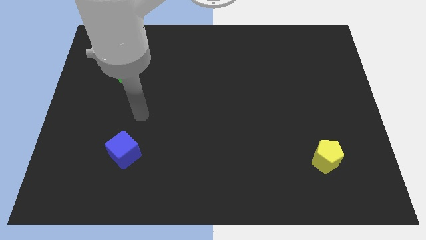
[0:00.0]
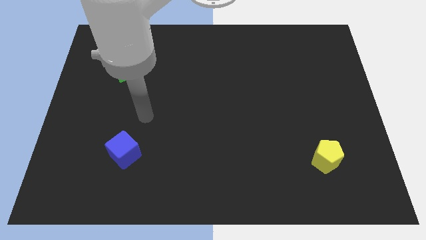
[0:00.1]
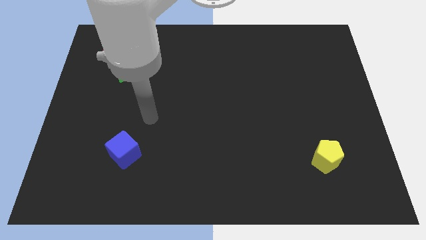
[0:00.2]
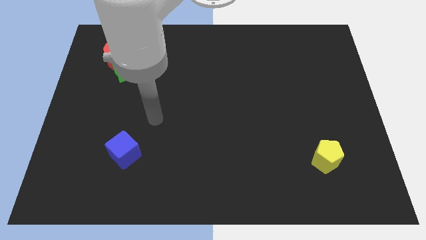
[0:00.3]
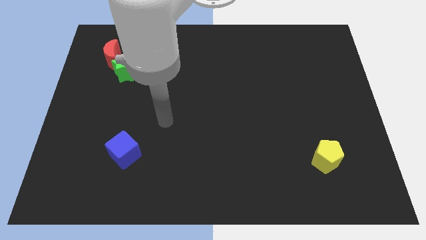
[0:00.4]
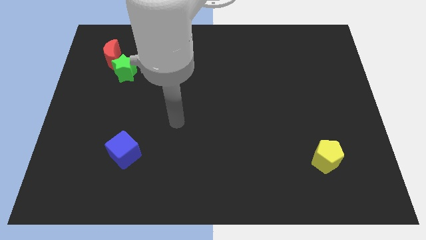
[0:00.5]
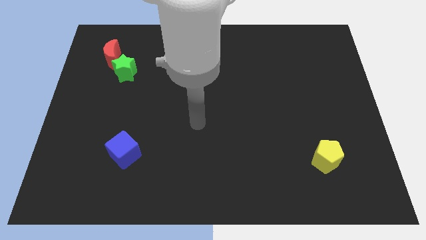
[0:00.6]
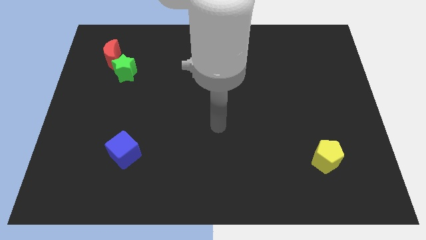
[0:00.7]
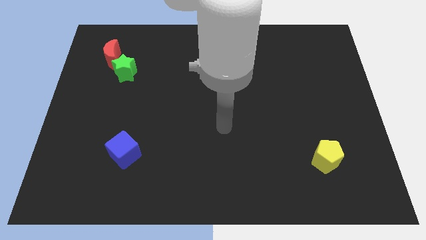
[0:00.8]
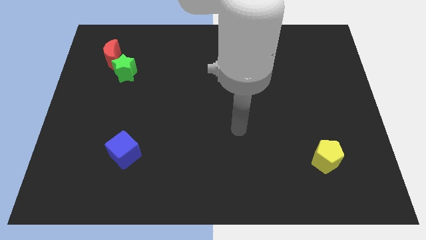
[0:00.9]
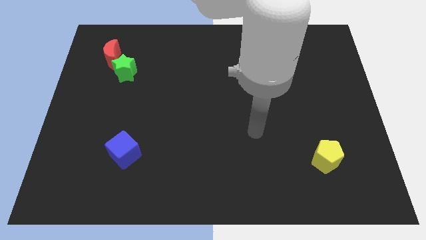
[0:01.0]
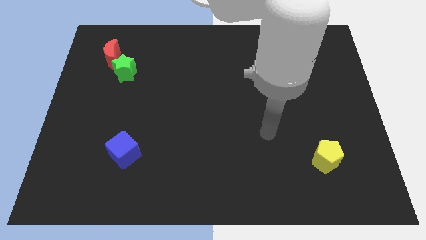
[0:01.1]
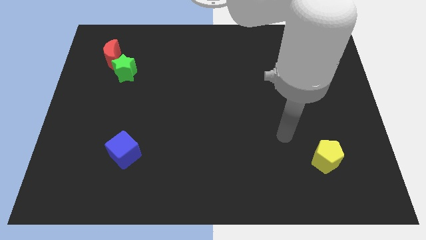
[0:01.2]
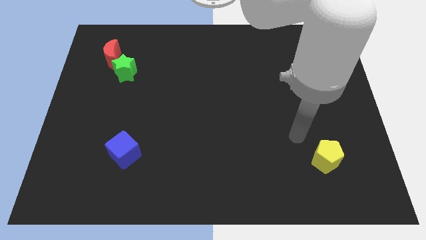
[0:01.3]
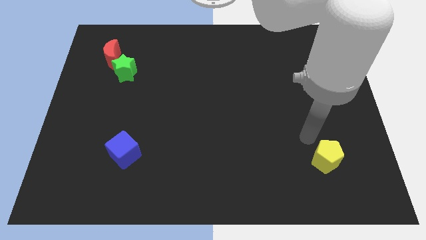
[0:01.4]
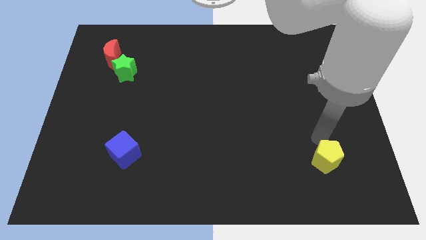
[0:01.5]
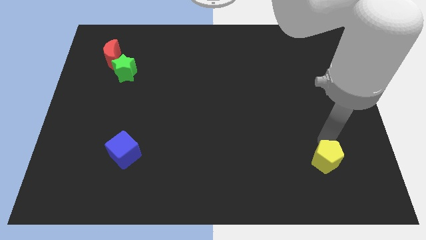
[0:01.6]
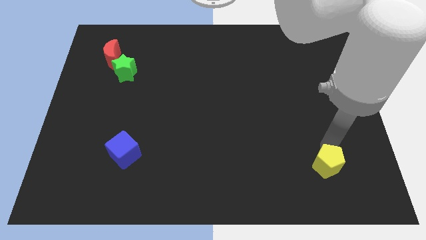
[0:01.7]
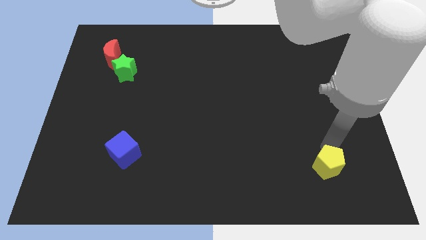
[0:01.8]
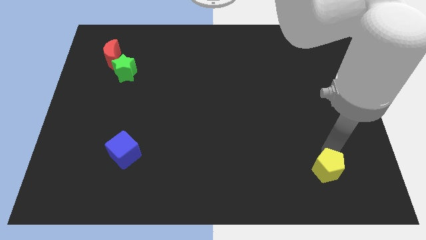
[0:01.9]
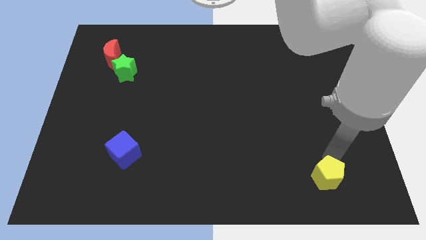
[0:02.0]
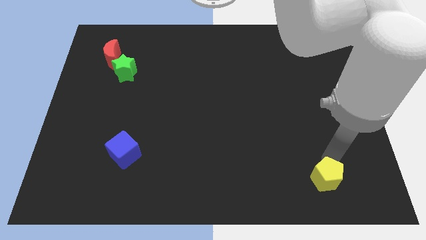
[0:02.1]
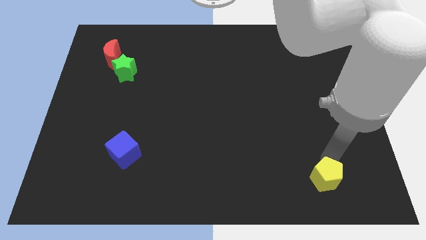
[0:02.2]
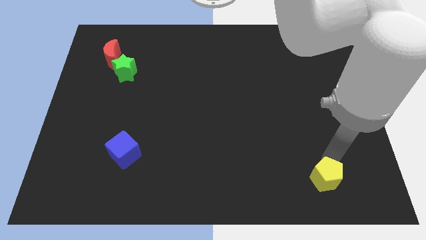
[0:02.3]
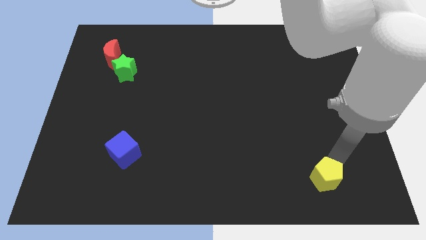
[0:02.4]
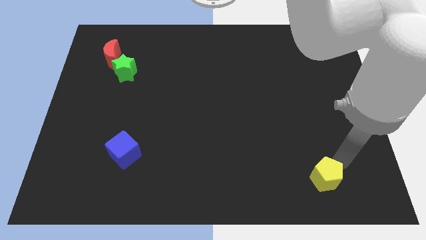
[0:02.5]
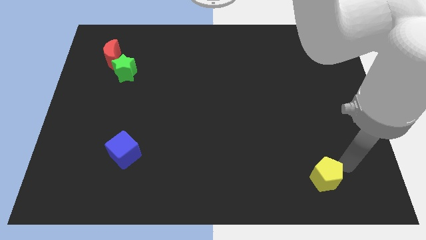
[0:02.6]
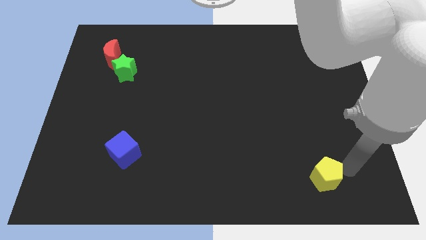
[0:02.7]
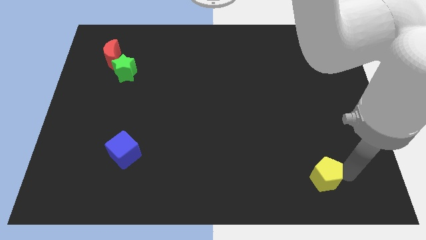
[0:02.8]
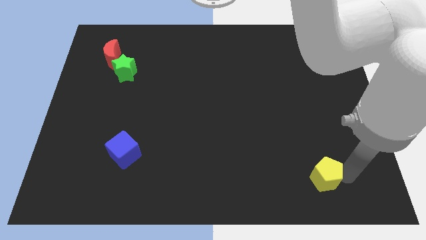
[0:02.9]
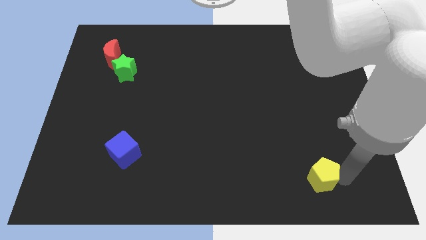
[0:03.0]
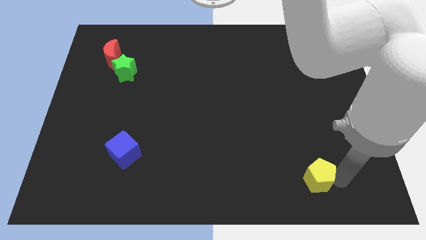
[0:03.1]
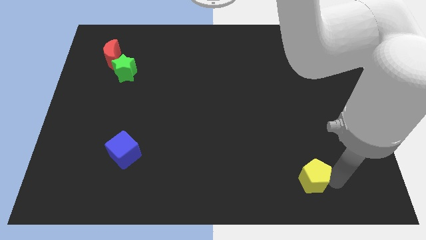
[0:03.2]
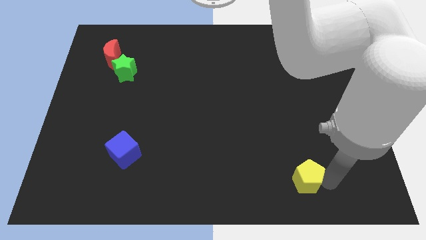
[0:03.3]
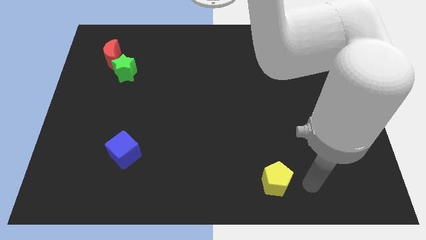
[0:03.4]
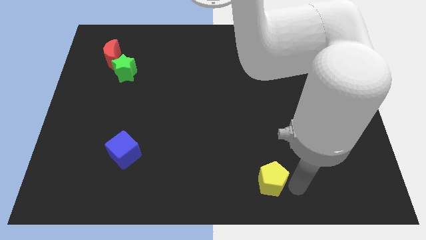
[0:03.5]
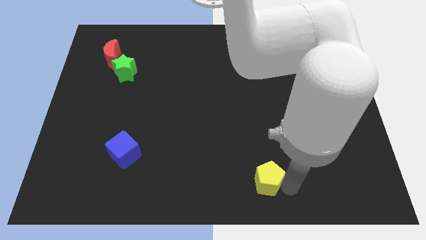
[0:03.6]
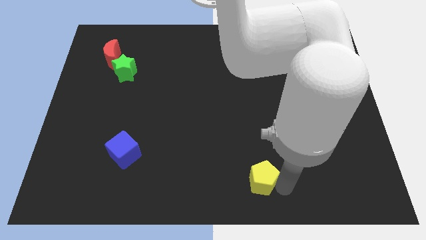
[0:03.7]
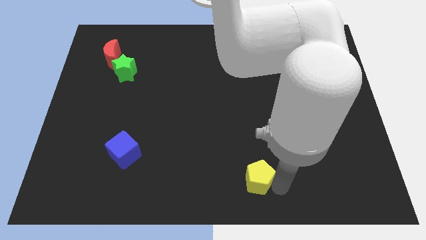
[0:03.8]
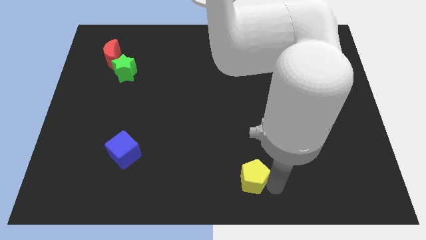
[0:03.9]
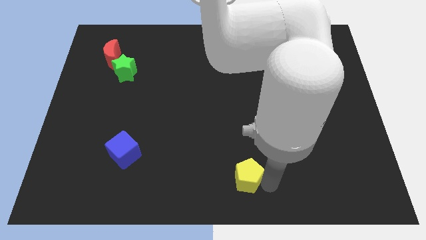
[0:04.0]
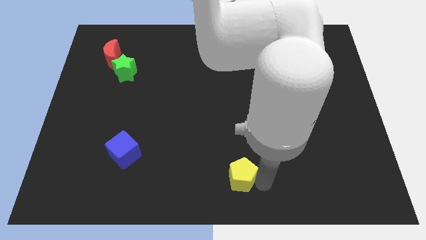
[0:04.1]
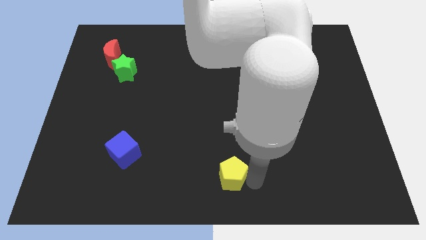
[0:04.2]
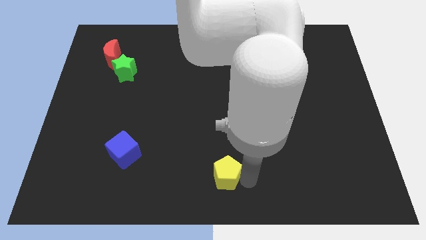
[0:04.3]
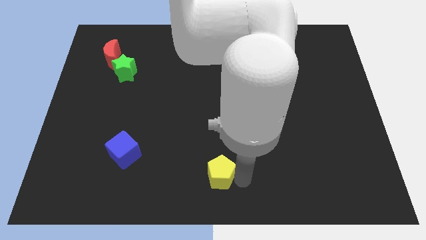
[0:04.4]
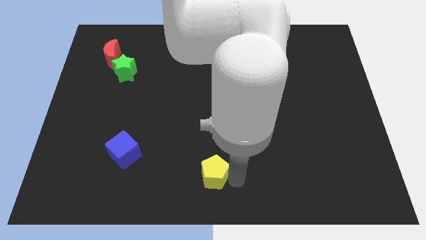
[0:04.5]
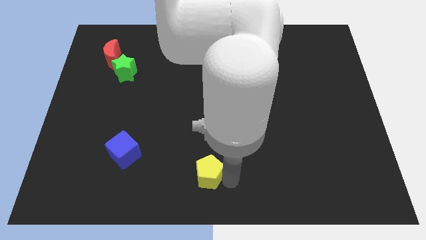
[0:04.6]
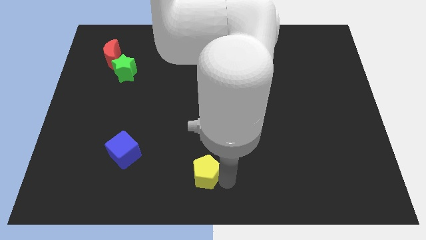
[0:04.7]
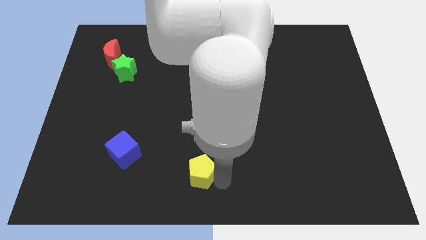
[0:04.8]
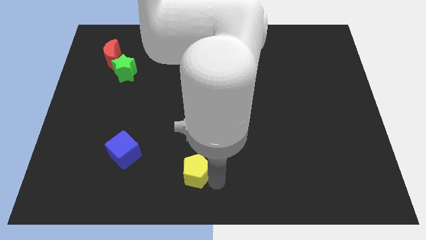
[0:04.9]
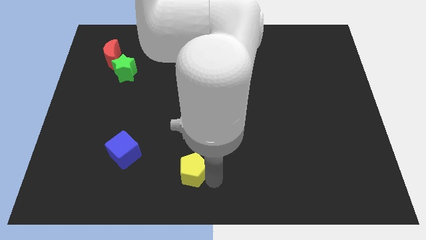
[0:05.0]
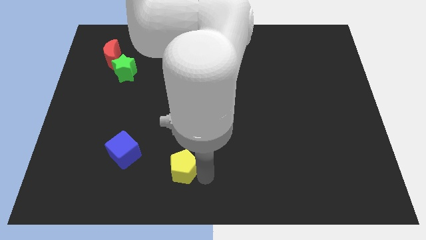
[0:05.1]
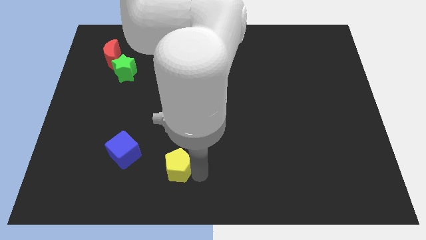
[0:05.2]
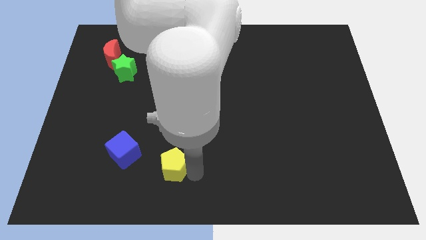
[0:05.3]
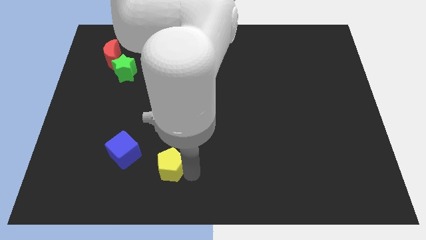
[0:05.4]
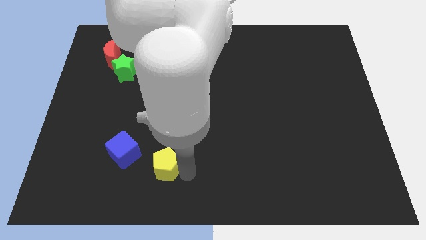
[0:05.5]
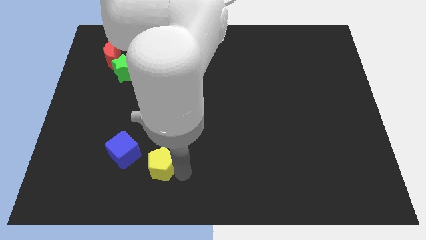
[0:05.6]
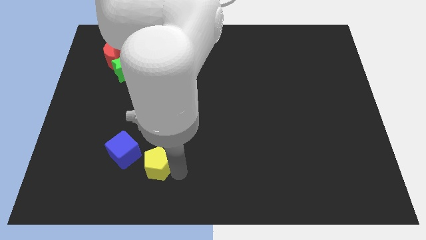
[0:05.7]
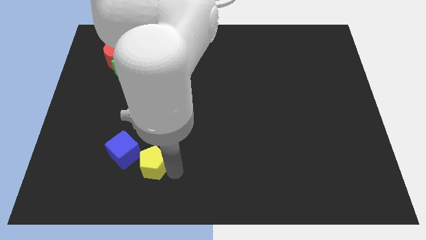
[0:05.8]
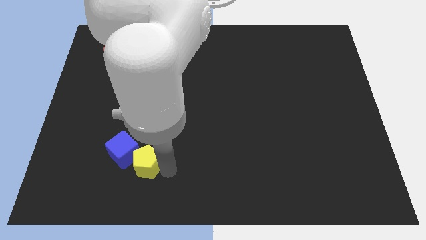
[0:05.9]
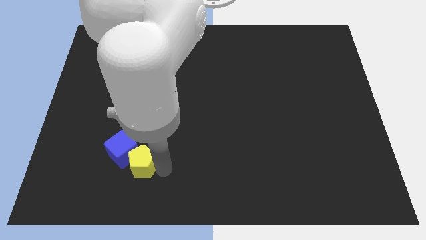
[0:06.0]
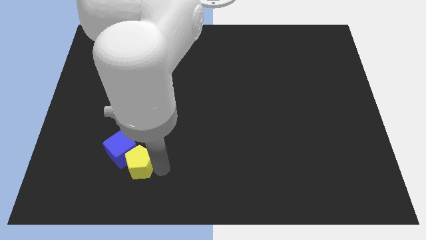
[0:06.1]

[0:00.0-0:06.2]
move the yellow pentagon towards the blue block

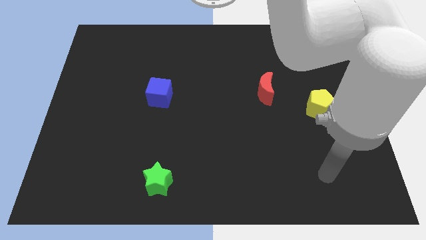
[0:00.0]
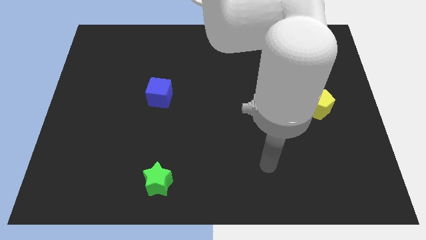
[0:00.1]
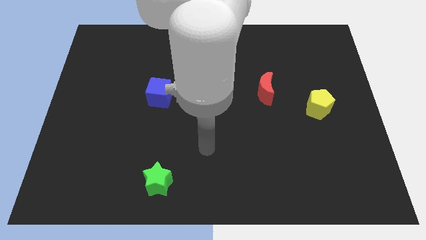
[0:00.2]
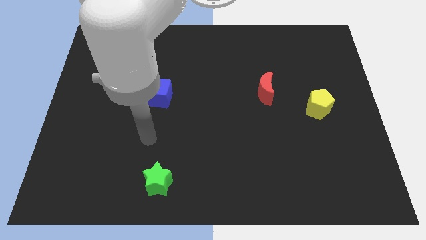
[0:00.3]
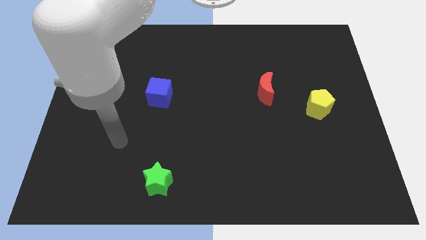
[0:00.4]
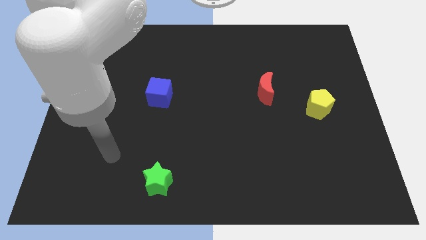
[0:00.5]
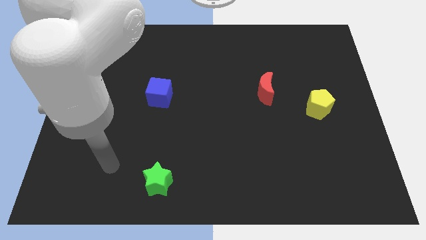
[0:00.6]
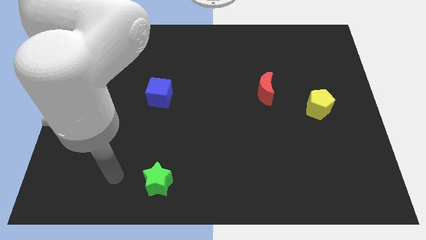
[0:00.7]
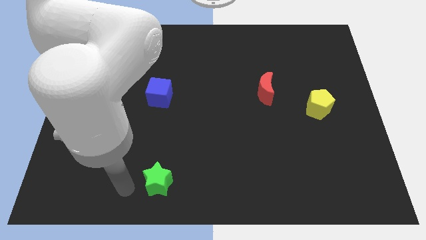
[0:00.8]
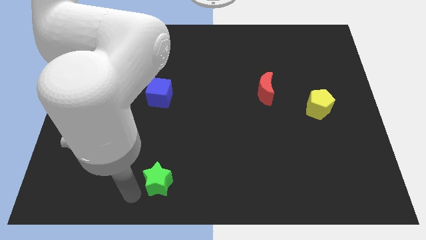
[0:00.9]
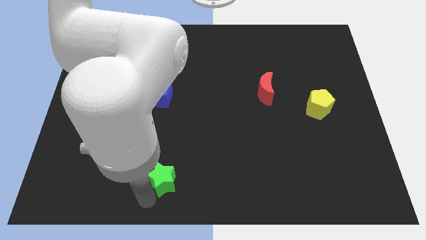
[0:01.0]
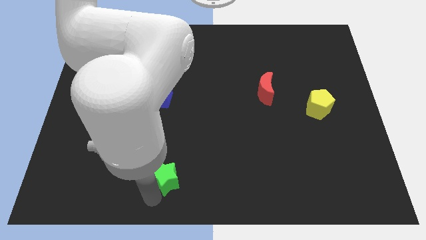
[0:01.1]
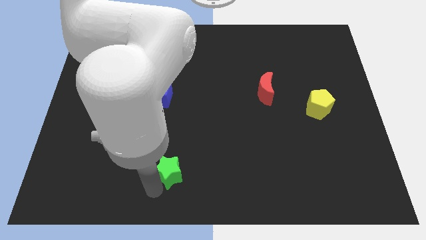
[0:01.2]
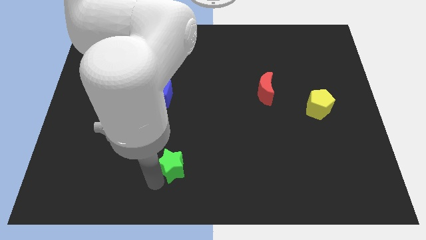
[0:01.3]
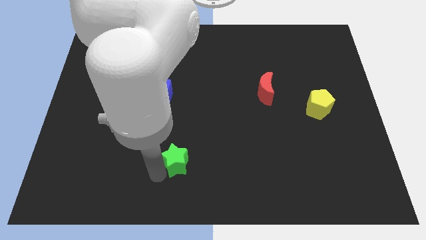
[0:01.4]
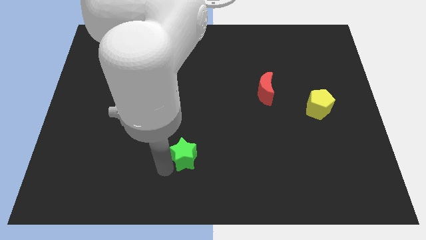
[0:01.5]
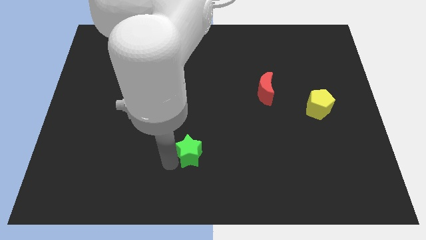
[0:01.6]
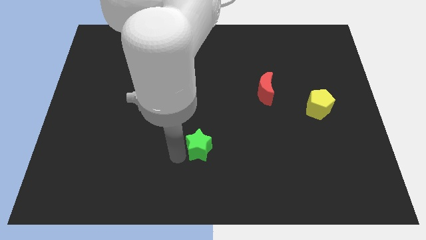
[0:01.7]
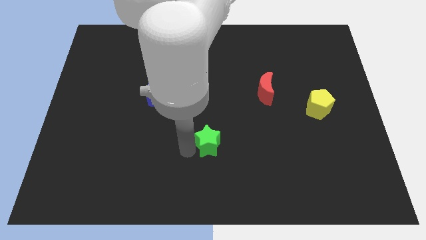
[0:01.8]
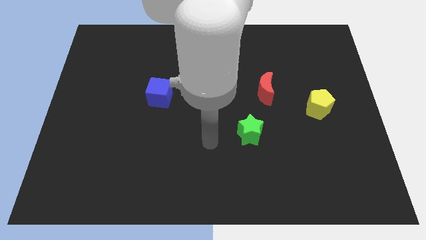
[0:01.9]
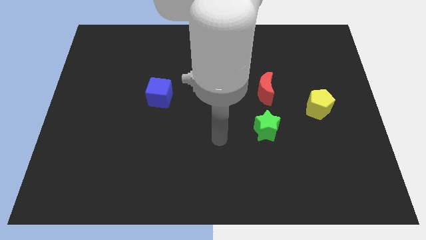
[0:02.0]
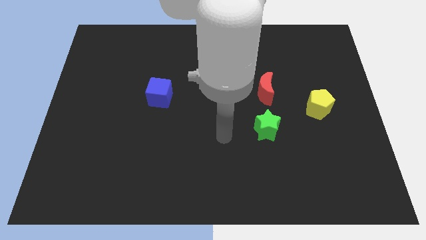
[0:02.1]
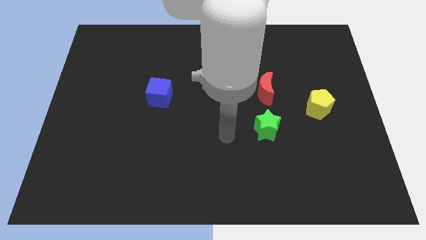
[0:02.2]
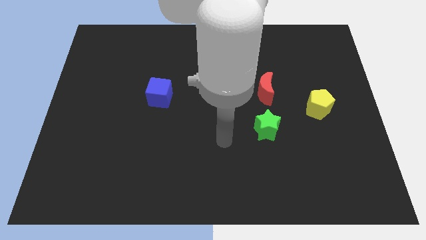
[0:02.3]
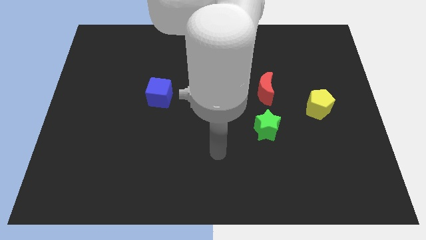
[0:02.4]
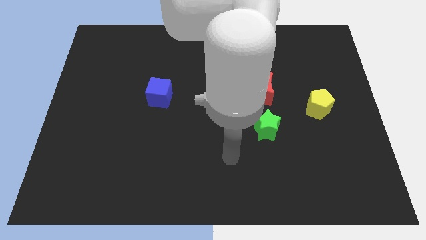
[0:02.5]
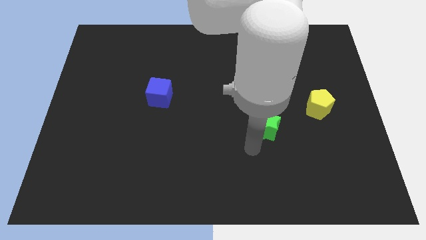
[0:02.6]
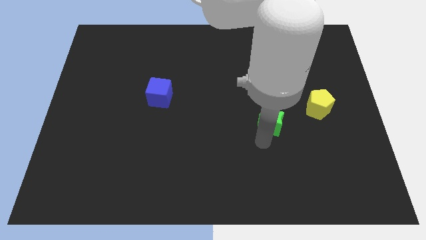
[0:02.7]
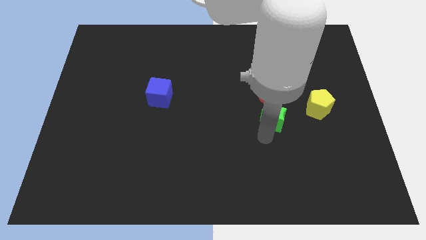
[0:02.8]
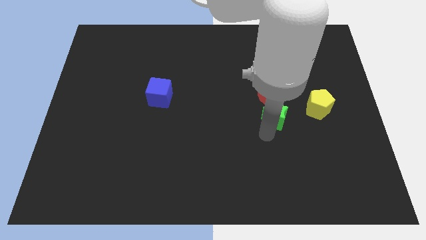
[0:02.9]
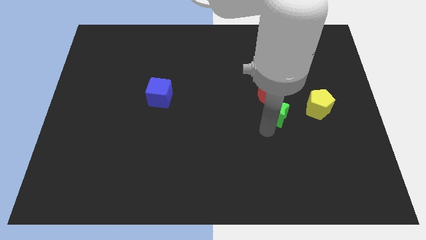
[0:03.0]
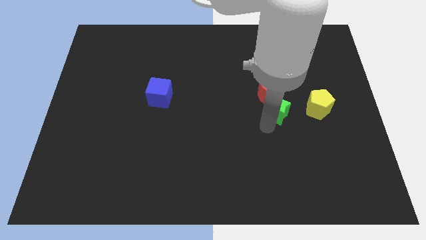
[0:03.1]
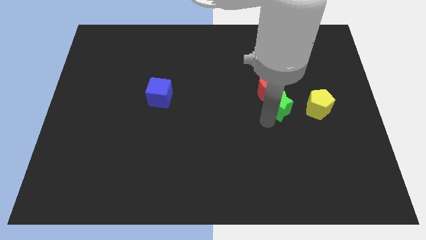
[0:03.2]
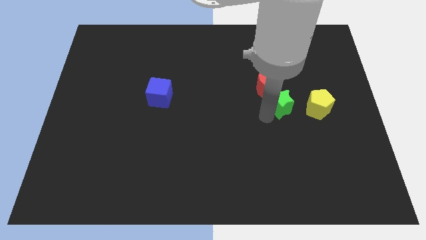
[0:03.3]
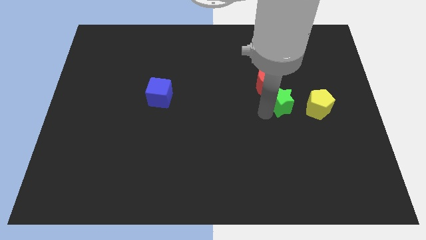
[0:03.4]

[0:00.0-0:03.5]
push the green block close to the red block
